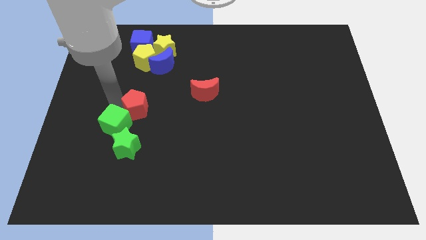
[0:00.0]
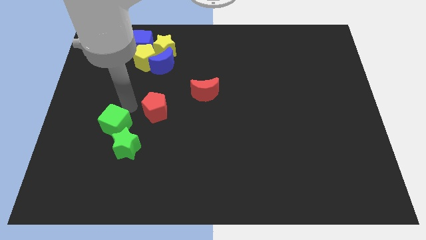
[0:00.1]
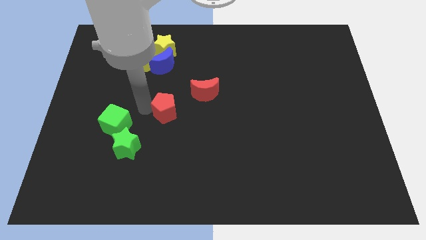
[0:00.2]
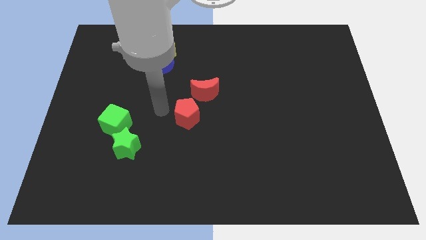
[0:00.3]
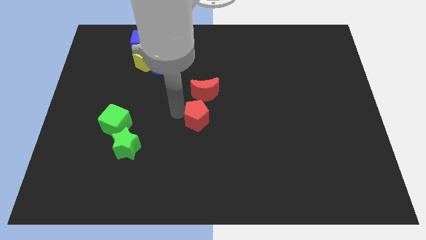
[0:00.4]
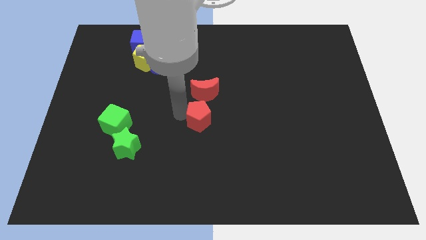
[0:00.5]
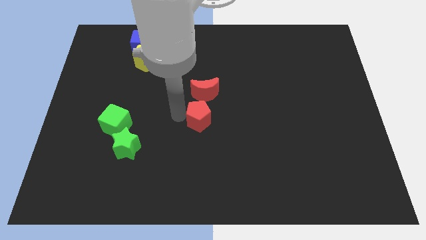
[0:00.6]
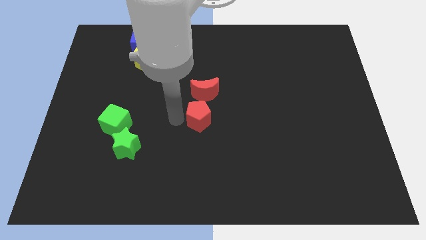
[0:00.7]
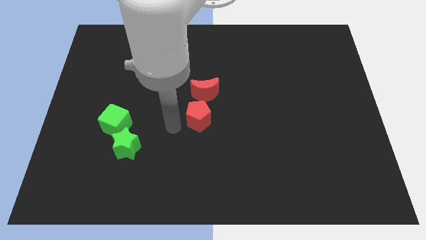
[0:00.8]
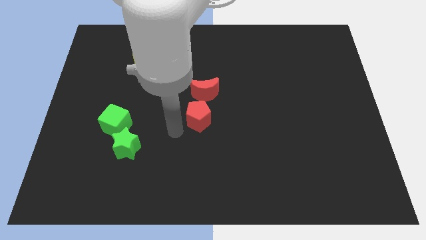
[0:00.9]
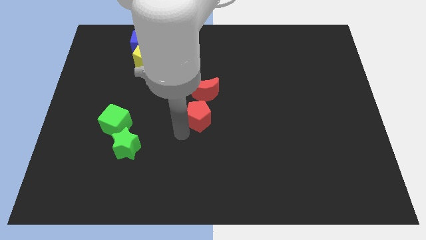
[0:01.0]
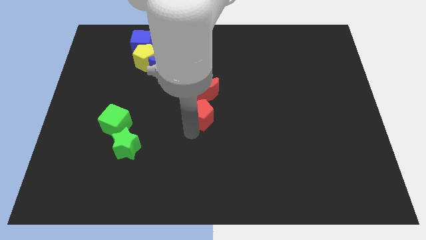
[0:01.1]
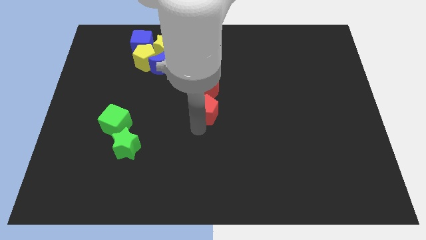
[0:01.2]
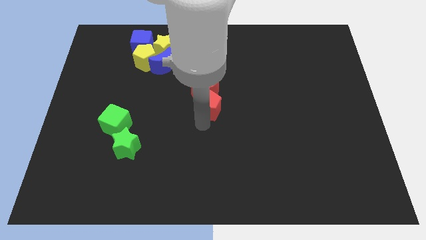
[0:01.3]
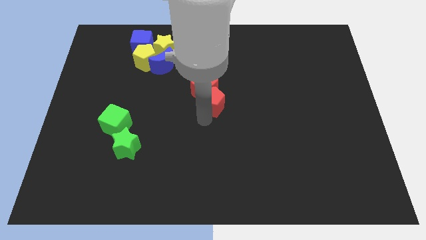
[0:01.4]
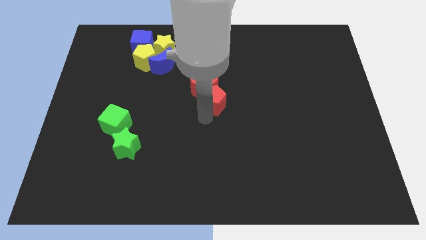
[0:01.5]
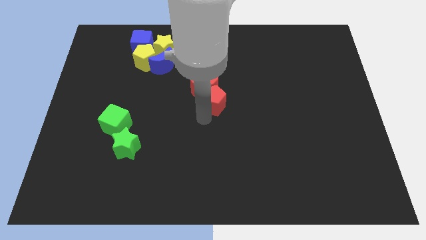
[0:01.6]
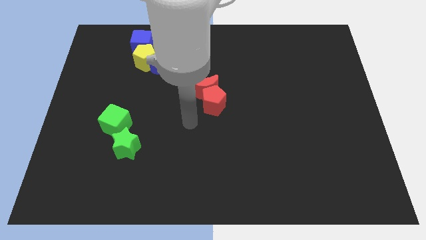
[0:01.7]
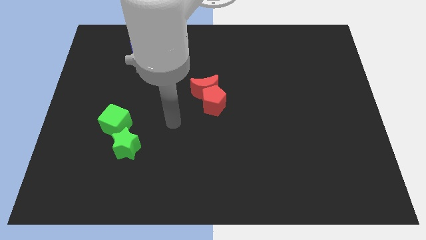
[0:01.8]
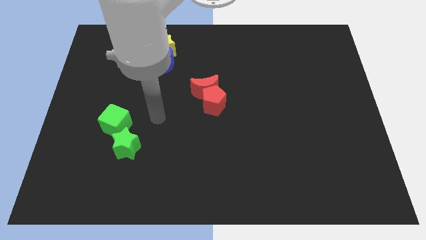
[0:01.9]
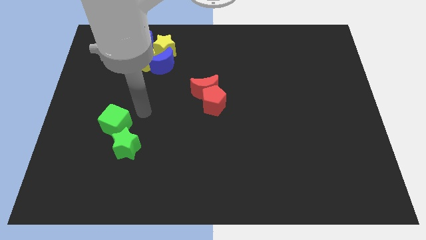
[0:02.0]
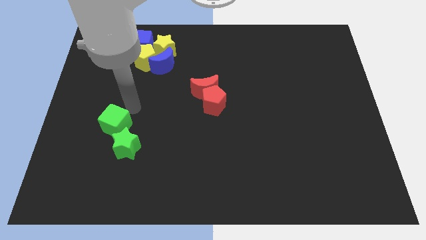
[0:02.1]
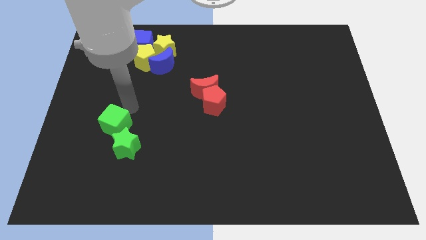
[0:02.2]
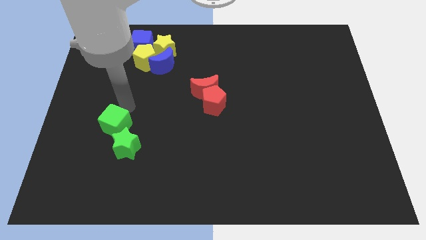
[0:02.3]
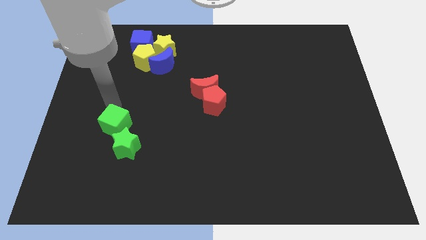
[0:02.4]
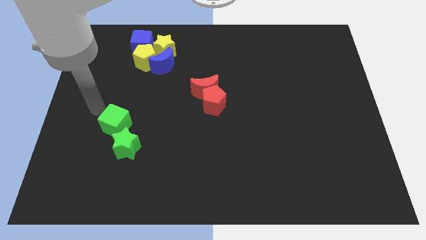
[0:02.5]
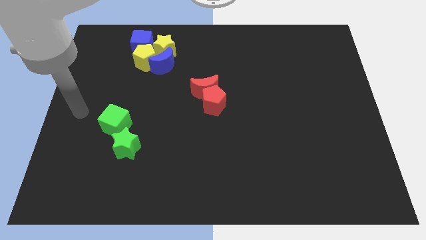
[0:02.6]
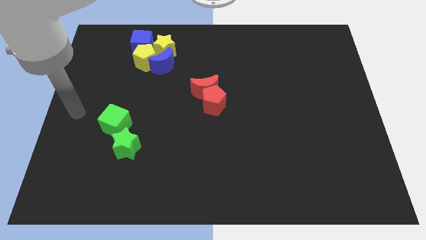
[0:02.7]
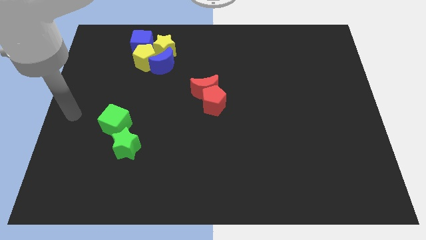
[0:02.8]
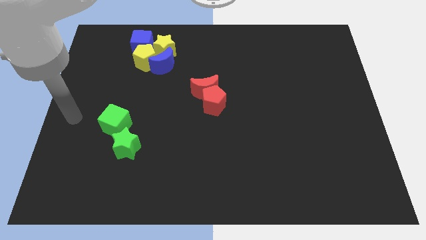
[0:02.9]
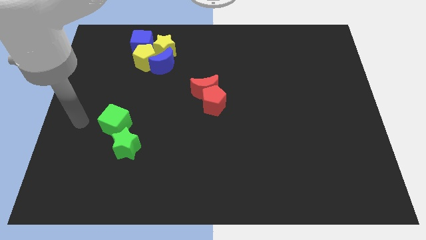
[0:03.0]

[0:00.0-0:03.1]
push the red pentagon into the red moon

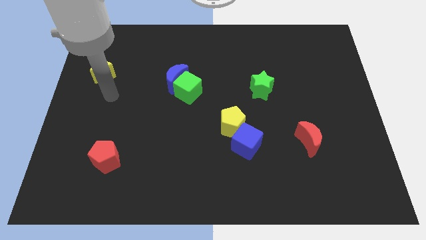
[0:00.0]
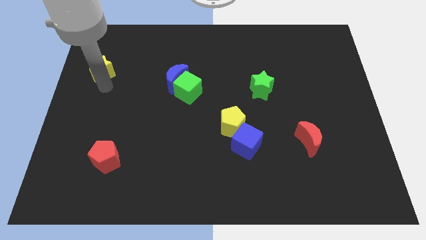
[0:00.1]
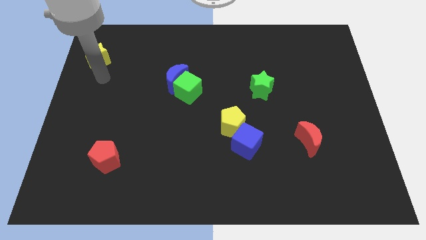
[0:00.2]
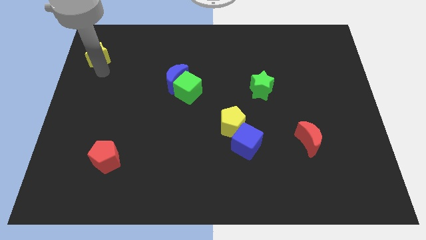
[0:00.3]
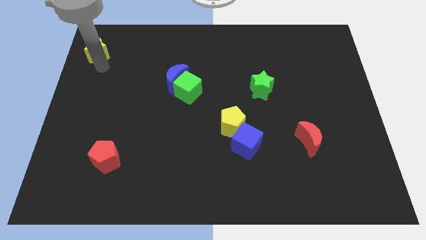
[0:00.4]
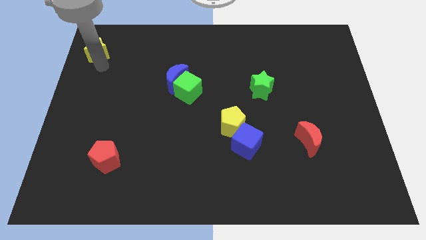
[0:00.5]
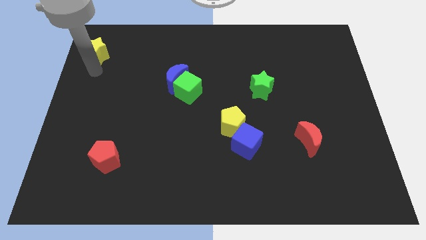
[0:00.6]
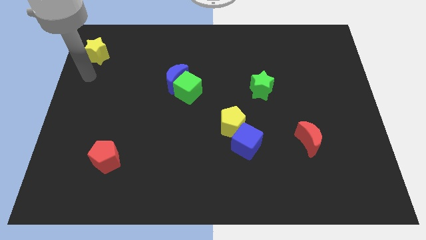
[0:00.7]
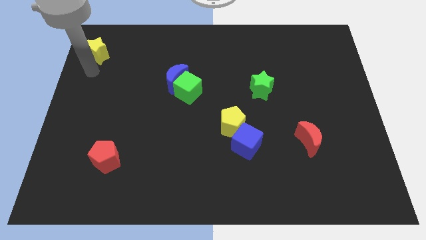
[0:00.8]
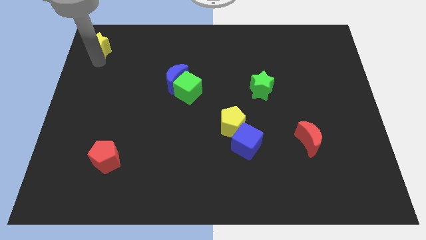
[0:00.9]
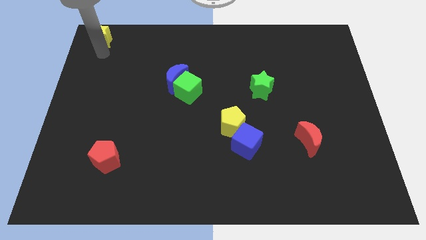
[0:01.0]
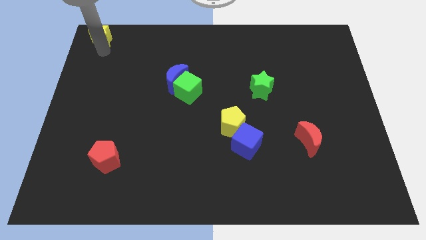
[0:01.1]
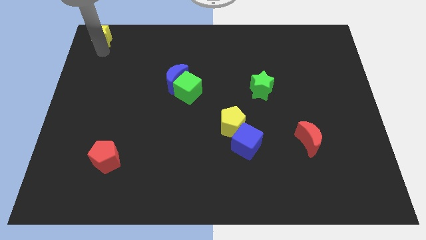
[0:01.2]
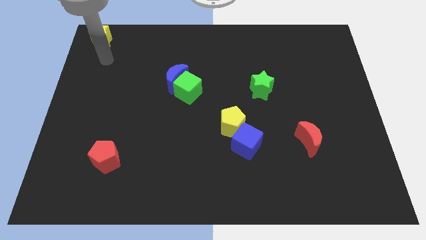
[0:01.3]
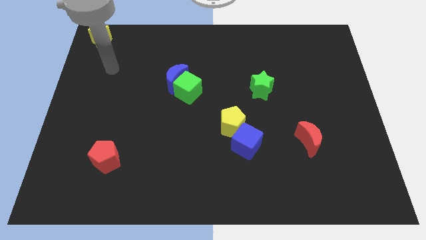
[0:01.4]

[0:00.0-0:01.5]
place the yellow star in the top left

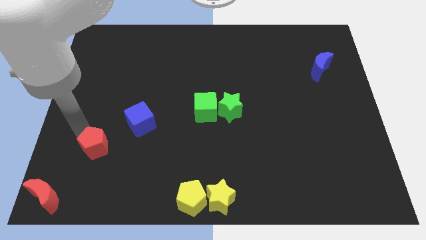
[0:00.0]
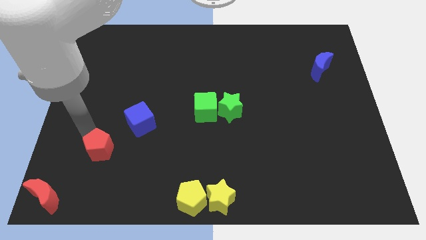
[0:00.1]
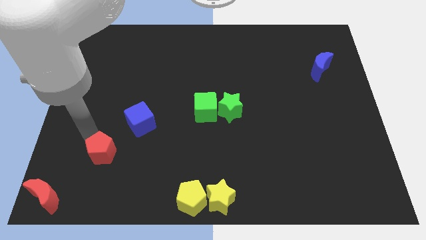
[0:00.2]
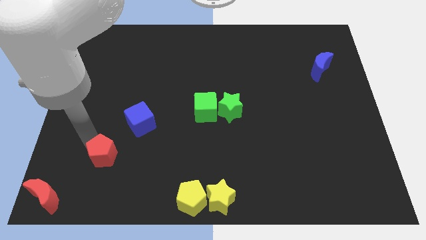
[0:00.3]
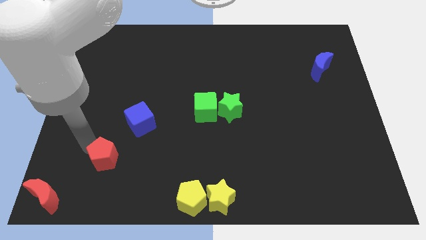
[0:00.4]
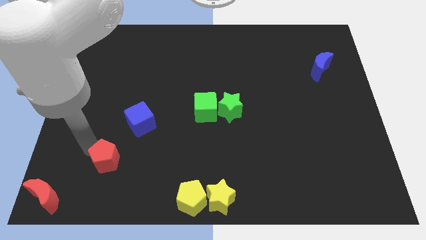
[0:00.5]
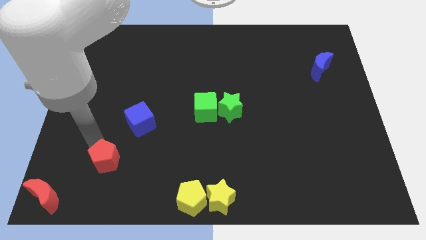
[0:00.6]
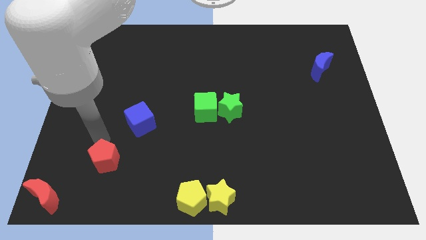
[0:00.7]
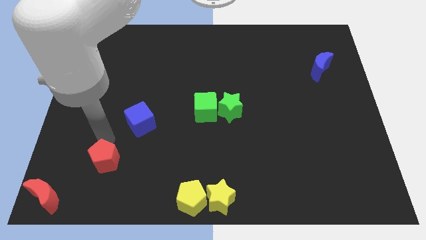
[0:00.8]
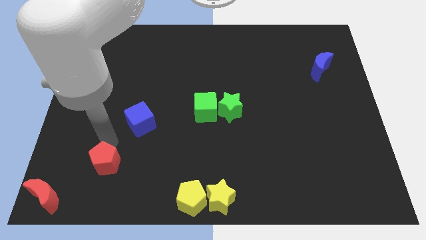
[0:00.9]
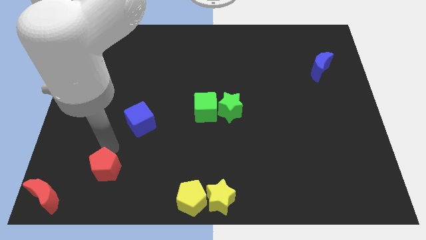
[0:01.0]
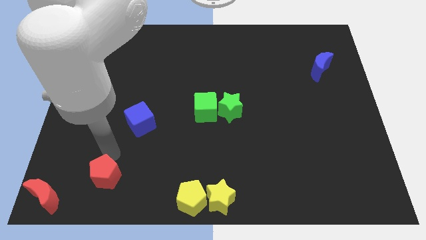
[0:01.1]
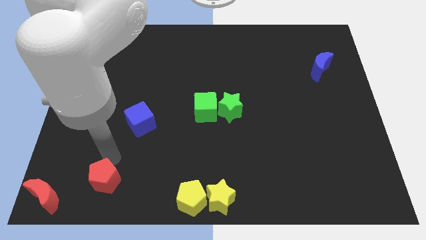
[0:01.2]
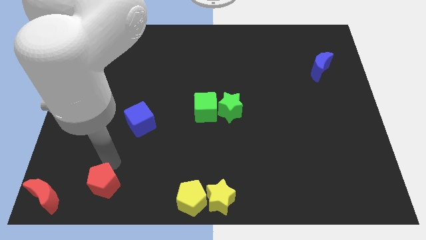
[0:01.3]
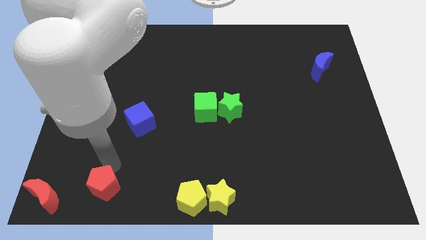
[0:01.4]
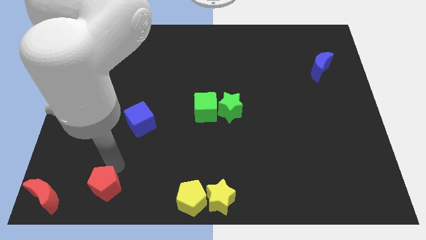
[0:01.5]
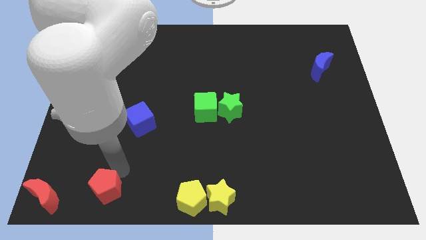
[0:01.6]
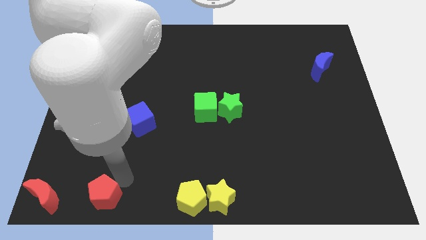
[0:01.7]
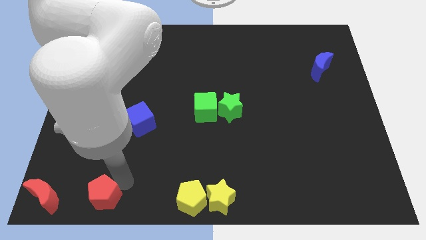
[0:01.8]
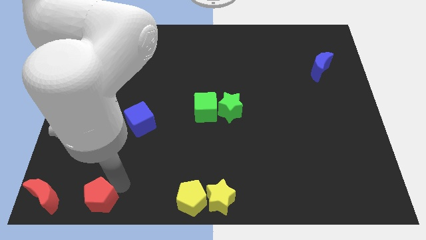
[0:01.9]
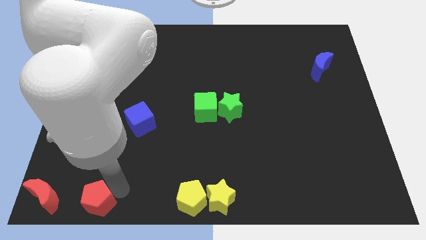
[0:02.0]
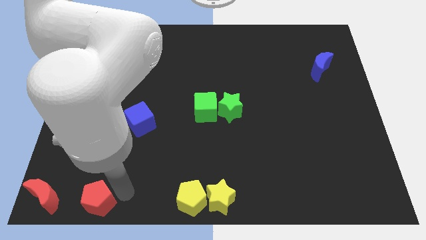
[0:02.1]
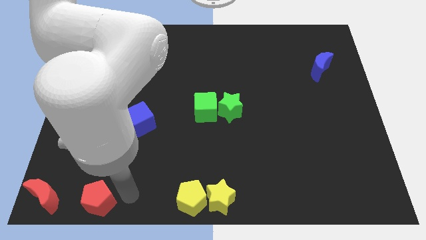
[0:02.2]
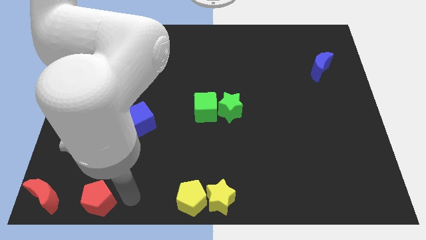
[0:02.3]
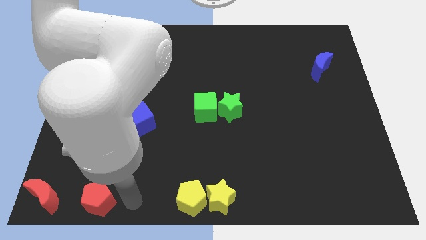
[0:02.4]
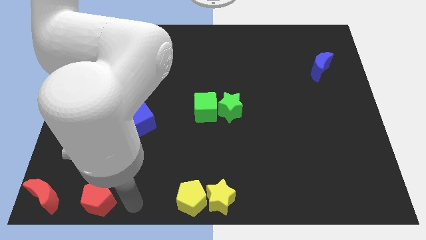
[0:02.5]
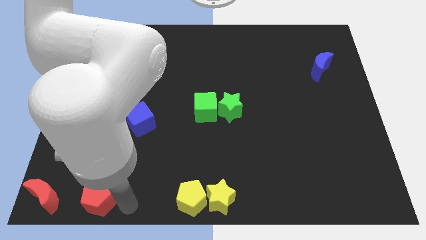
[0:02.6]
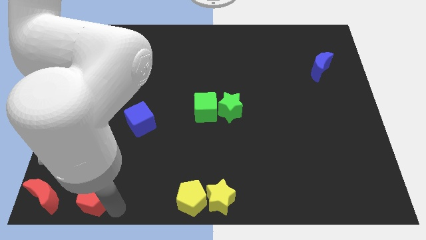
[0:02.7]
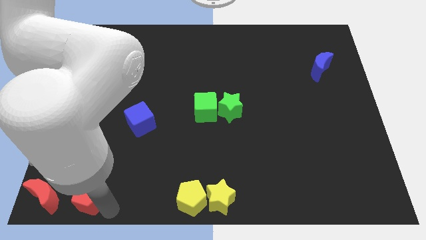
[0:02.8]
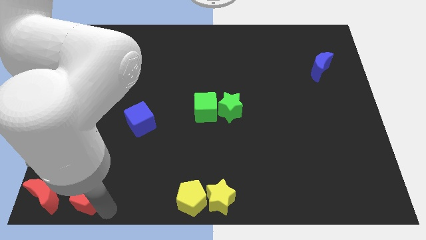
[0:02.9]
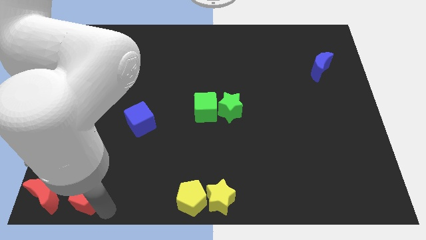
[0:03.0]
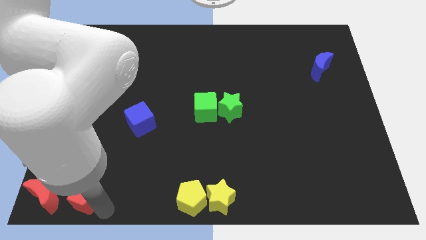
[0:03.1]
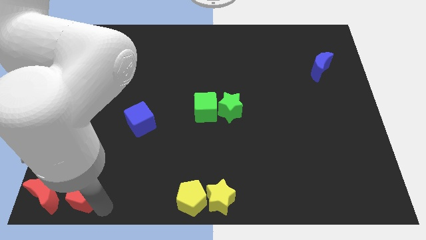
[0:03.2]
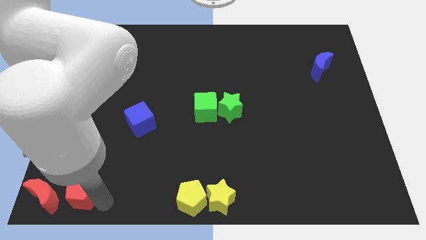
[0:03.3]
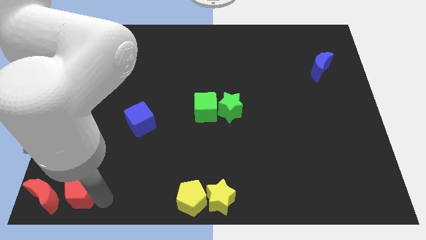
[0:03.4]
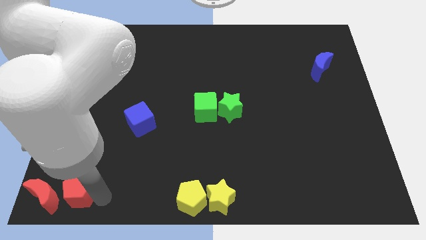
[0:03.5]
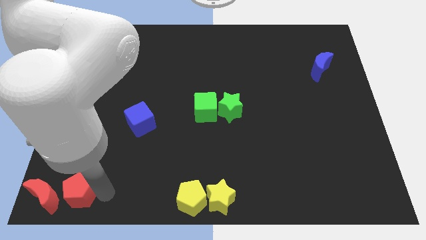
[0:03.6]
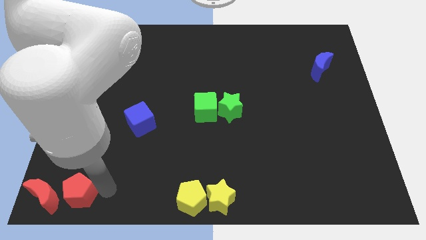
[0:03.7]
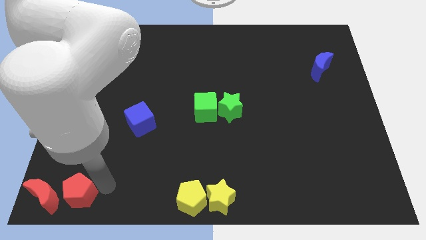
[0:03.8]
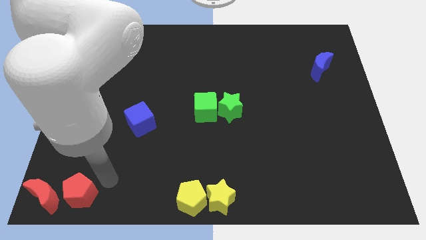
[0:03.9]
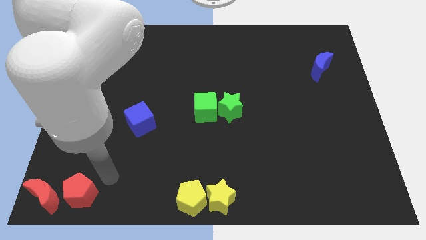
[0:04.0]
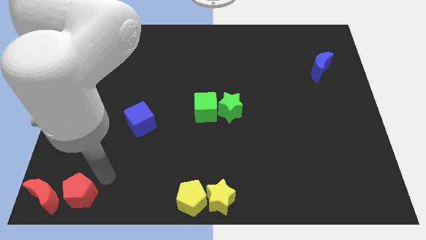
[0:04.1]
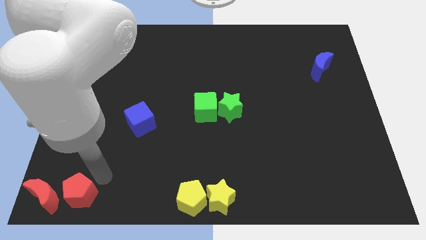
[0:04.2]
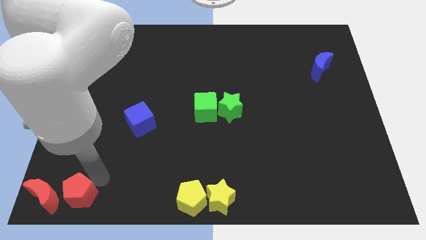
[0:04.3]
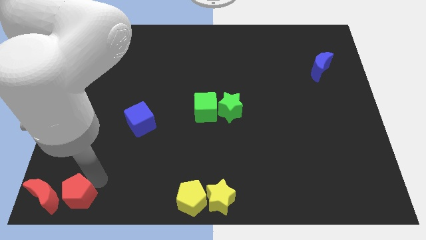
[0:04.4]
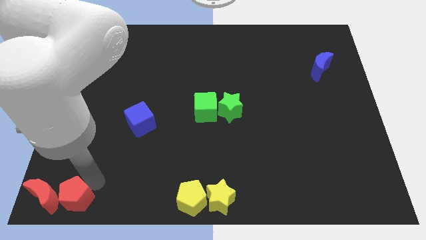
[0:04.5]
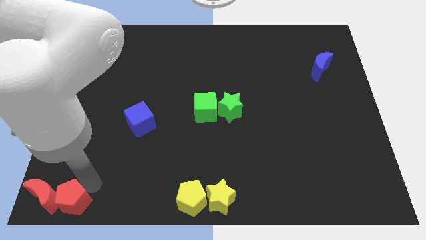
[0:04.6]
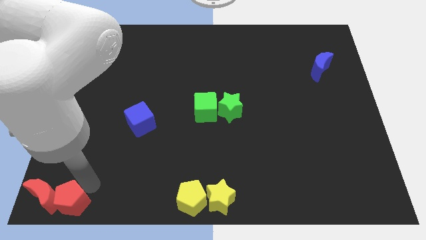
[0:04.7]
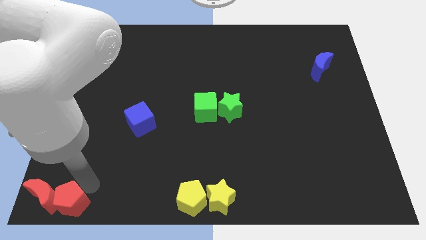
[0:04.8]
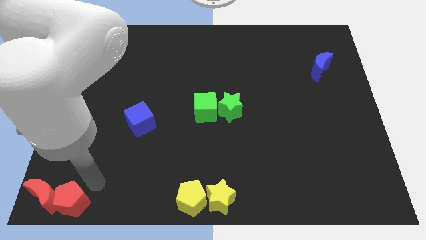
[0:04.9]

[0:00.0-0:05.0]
move the red pentagon in to red crescent
